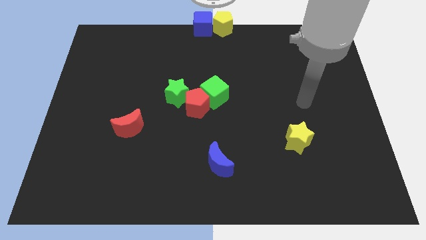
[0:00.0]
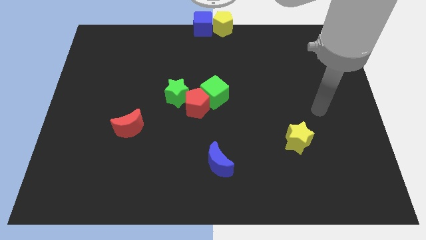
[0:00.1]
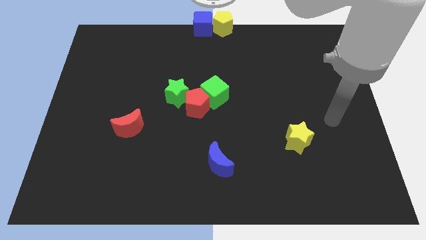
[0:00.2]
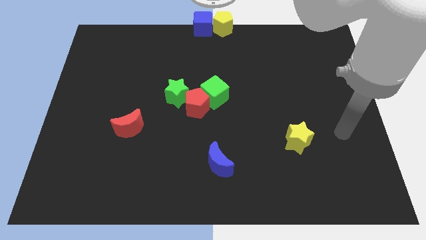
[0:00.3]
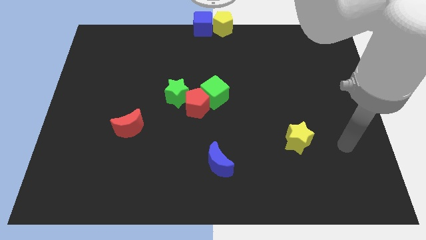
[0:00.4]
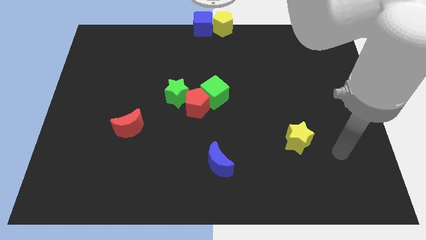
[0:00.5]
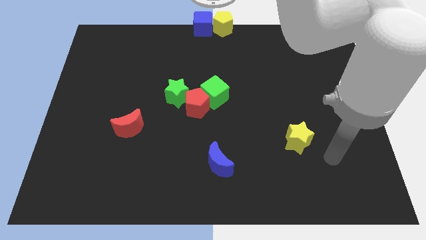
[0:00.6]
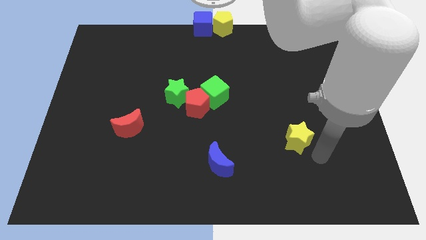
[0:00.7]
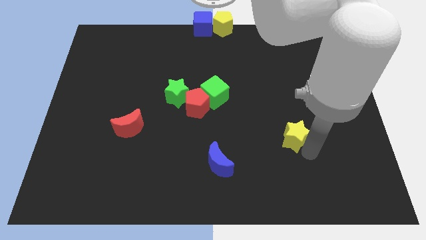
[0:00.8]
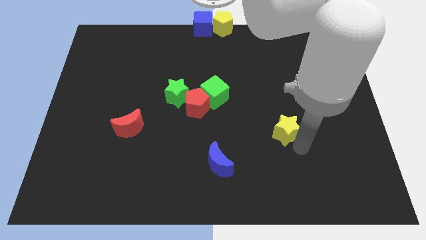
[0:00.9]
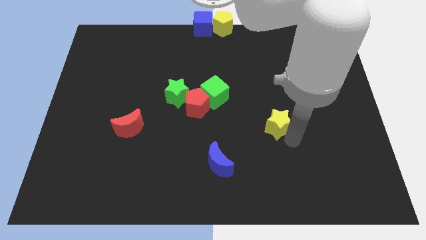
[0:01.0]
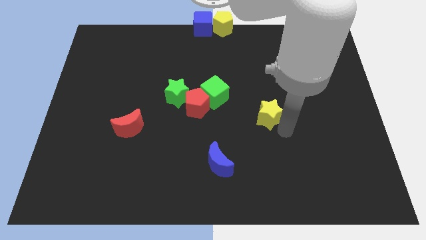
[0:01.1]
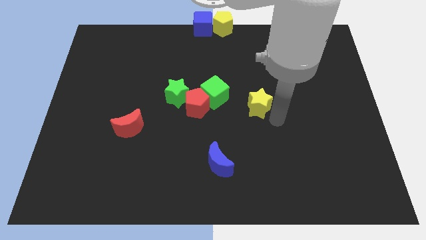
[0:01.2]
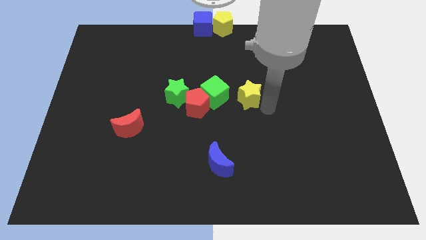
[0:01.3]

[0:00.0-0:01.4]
move the yellow star to the right of the green cube

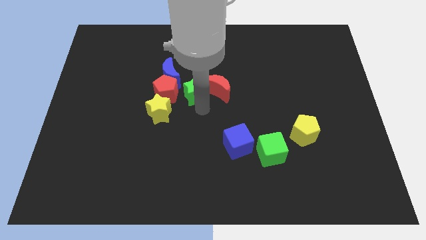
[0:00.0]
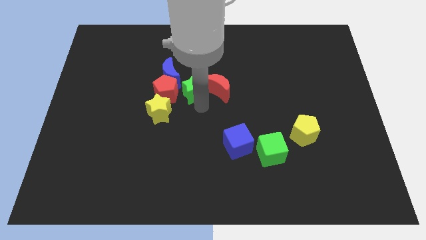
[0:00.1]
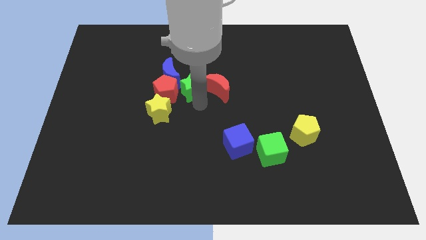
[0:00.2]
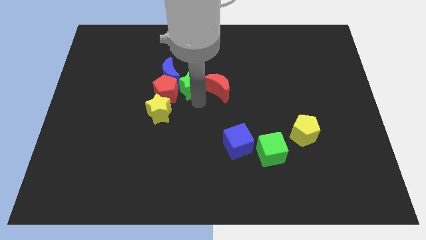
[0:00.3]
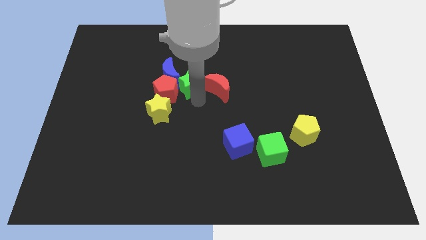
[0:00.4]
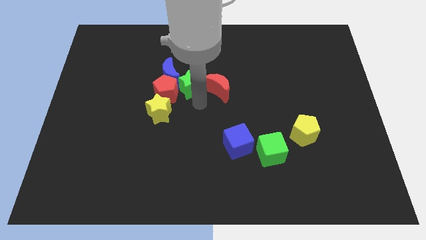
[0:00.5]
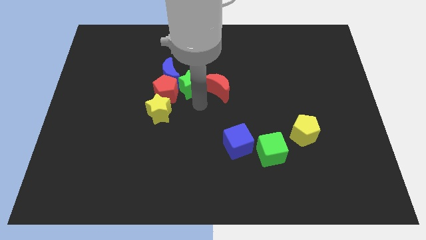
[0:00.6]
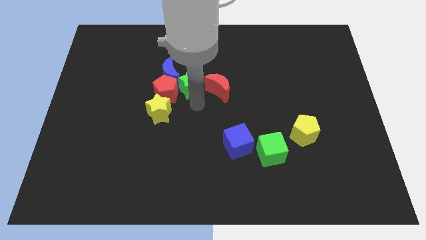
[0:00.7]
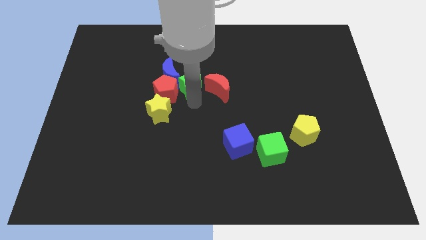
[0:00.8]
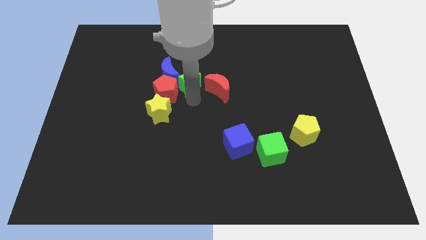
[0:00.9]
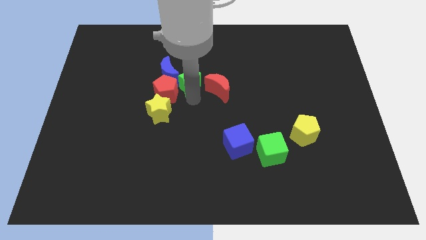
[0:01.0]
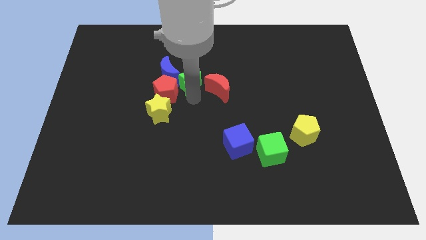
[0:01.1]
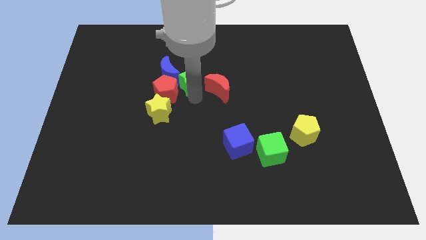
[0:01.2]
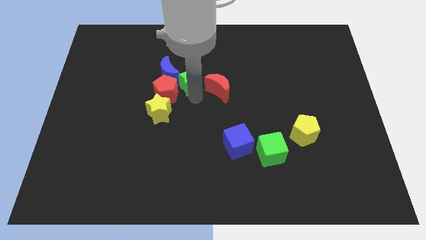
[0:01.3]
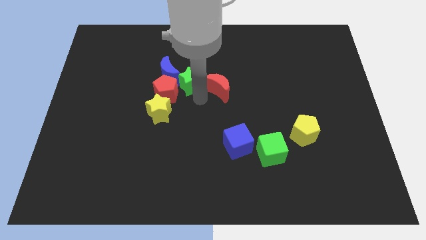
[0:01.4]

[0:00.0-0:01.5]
push the green star into the bottom of the blue crescent

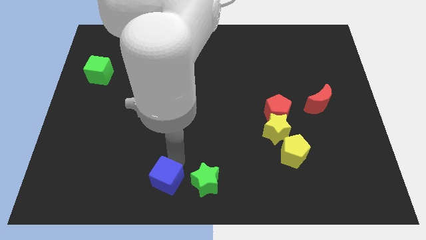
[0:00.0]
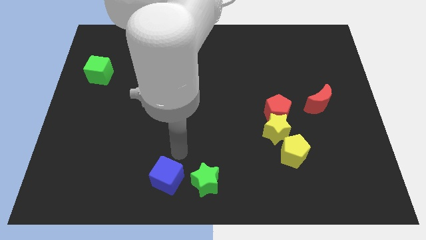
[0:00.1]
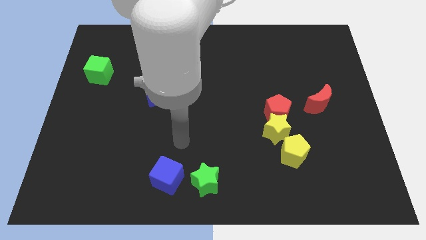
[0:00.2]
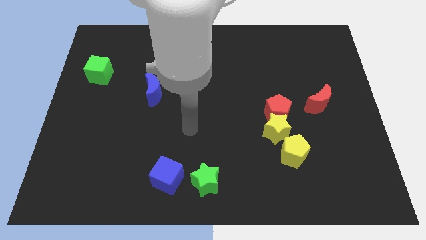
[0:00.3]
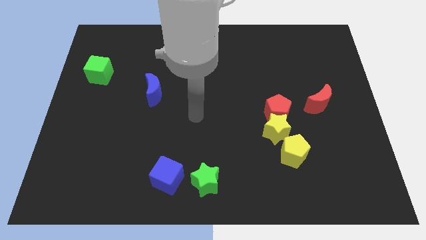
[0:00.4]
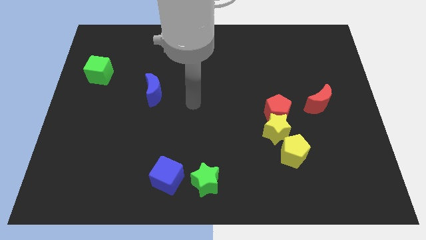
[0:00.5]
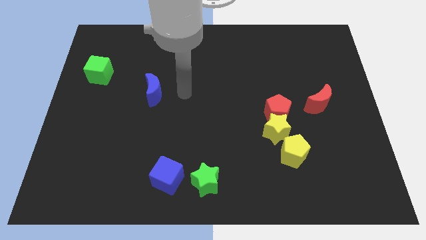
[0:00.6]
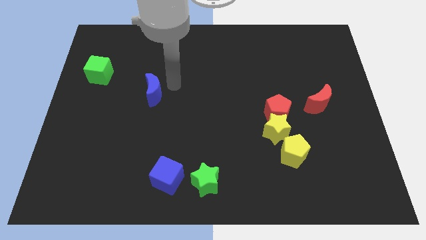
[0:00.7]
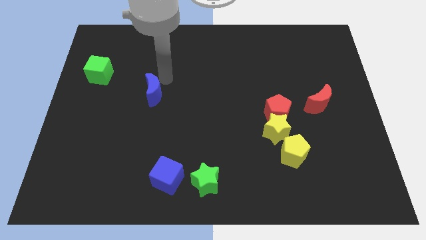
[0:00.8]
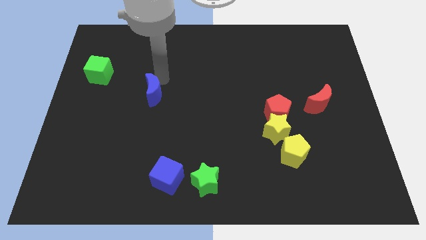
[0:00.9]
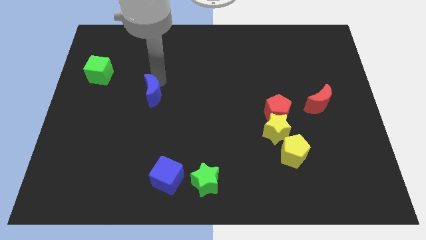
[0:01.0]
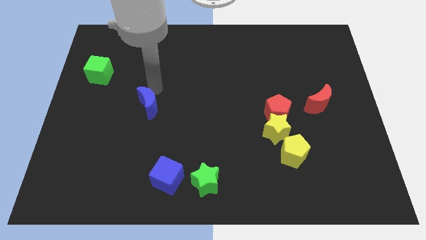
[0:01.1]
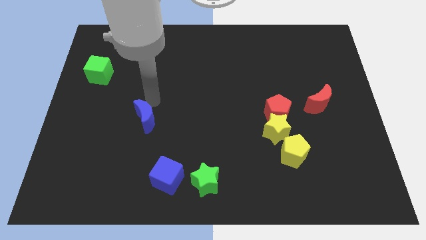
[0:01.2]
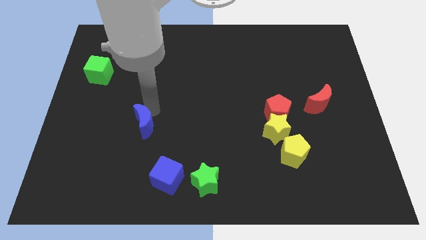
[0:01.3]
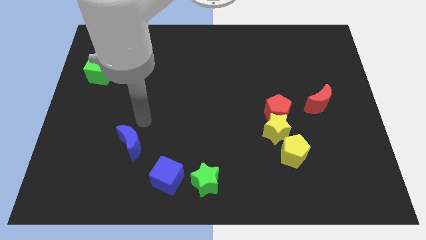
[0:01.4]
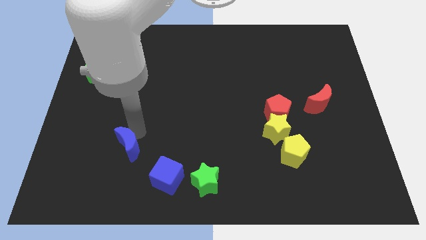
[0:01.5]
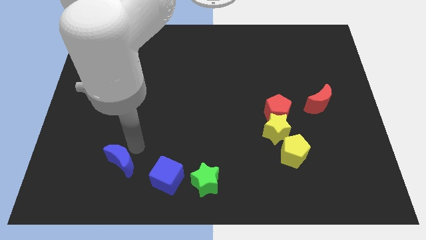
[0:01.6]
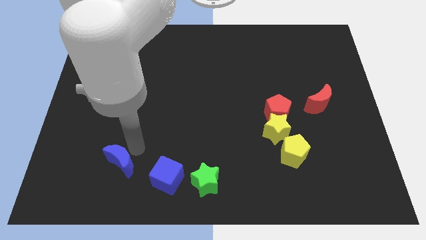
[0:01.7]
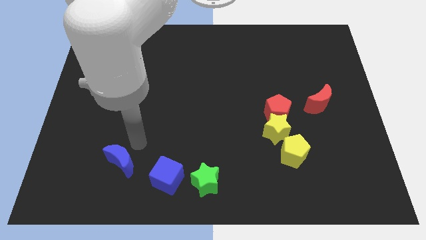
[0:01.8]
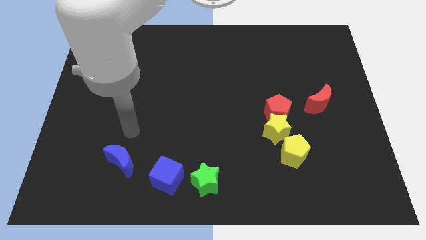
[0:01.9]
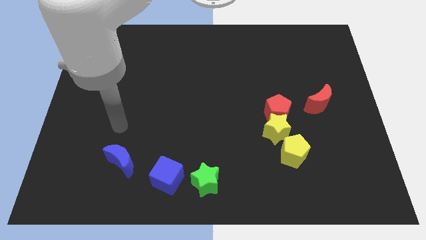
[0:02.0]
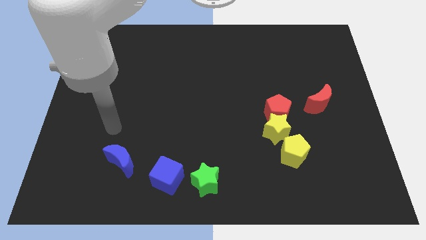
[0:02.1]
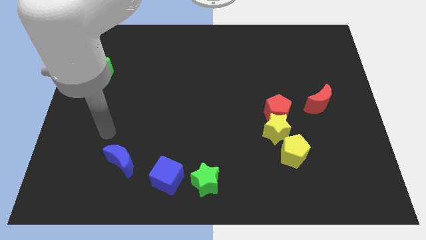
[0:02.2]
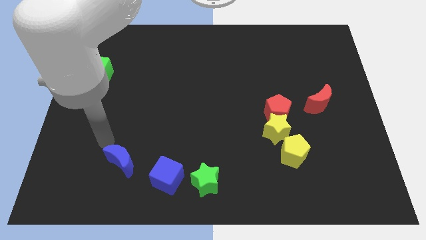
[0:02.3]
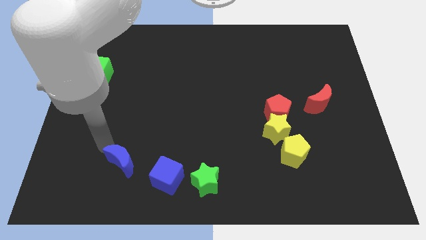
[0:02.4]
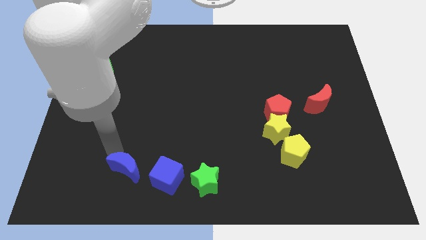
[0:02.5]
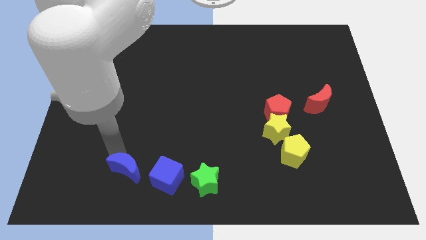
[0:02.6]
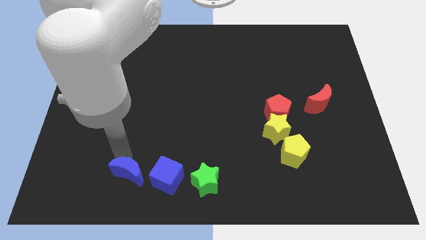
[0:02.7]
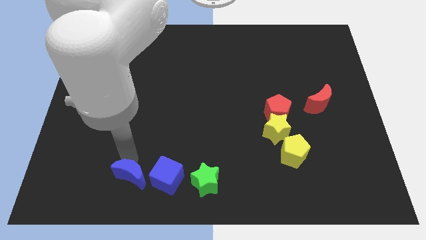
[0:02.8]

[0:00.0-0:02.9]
place the blue crescent to the left side of blue cube

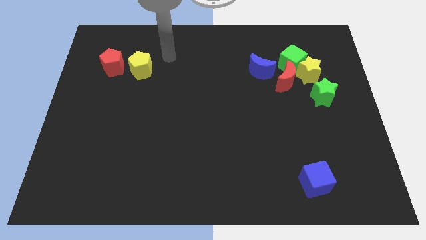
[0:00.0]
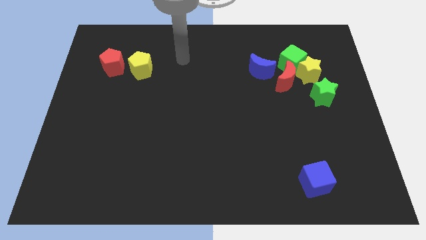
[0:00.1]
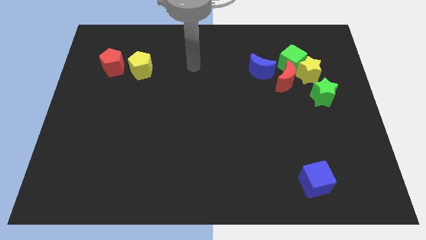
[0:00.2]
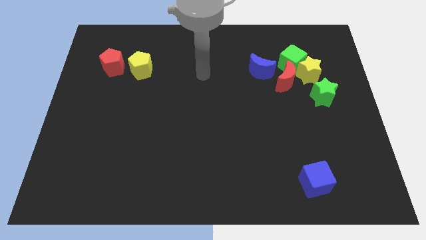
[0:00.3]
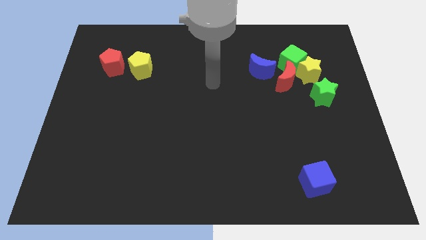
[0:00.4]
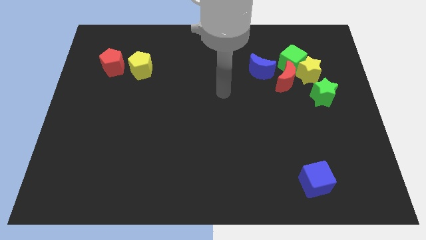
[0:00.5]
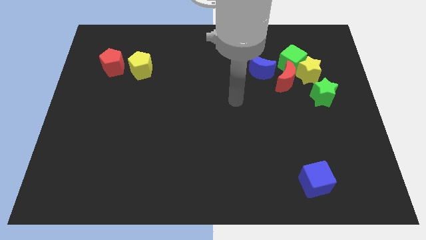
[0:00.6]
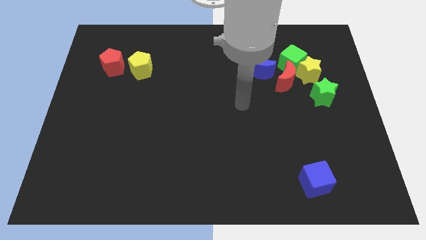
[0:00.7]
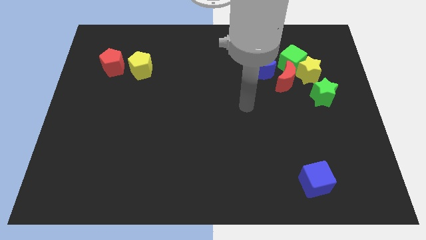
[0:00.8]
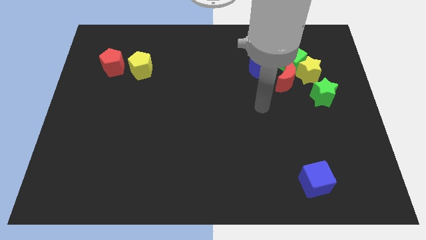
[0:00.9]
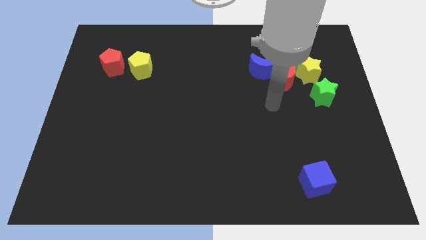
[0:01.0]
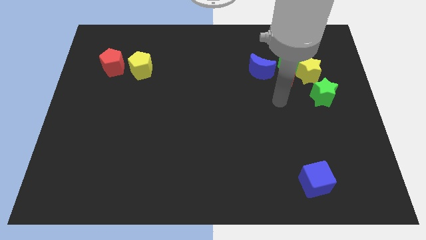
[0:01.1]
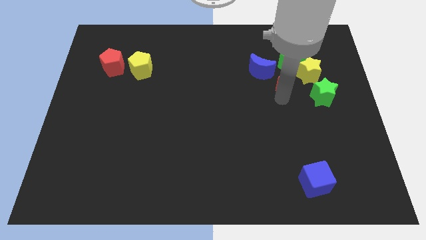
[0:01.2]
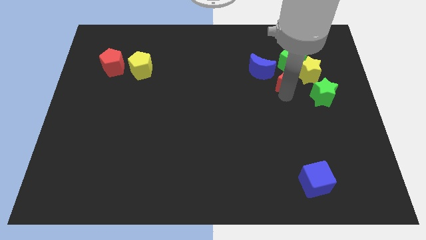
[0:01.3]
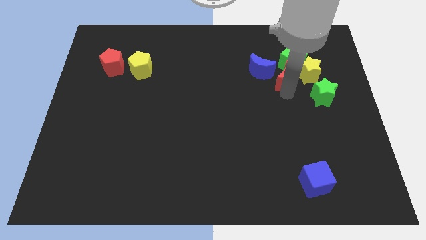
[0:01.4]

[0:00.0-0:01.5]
tap the red crescent

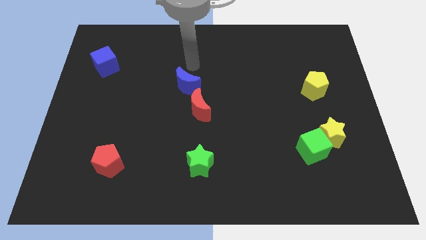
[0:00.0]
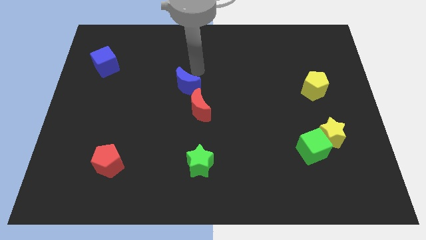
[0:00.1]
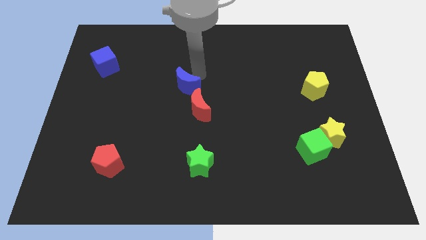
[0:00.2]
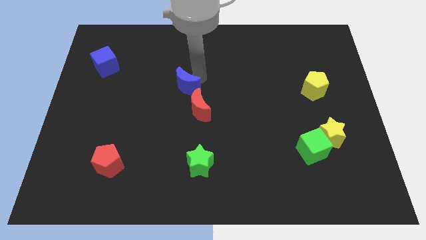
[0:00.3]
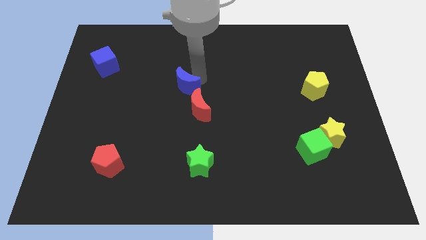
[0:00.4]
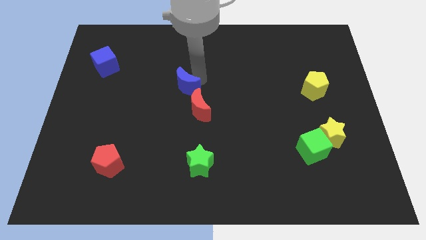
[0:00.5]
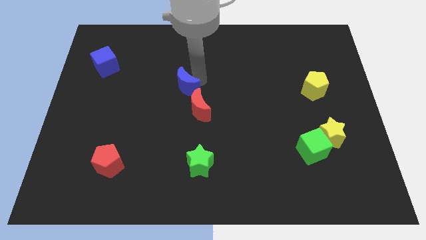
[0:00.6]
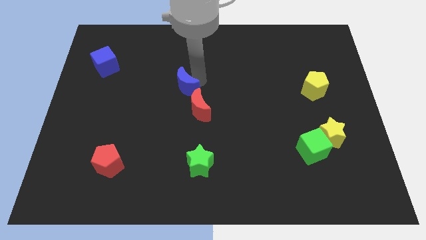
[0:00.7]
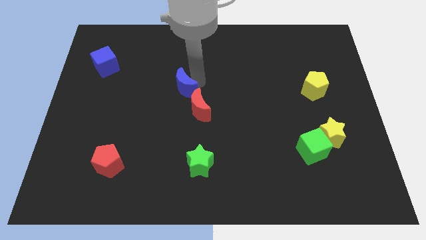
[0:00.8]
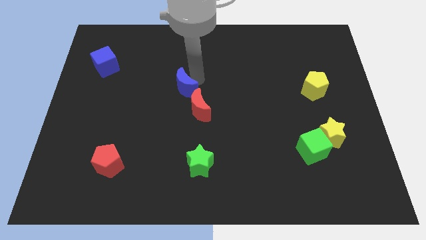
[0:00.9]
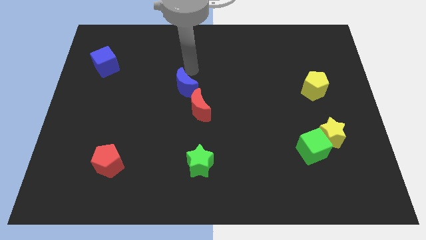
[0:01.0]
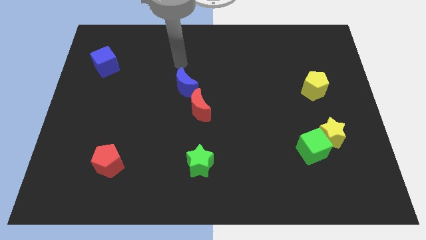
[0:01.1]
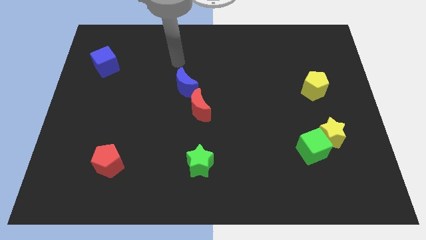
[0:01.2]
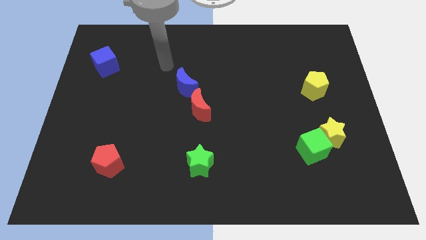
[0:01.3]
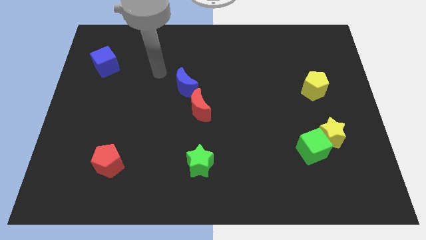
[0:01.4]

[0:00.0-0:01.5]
adjust the blue crescent diagonally to red crescent

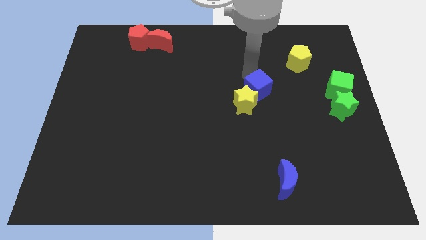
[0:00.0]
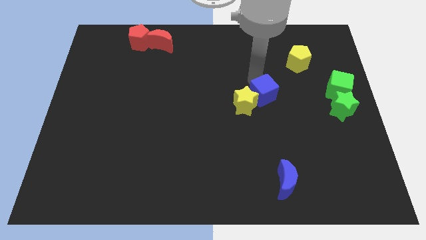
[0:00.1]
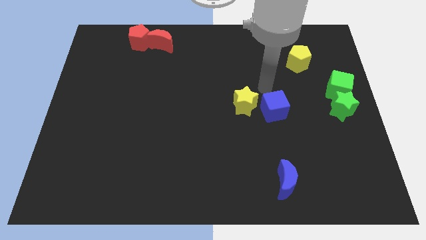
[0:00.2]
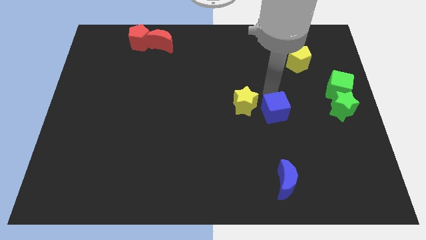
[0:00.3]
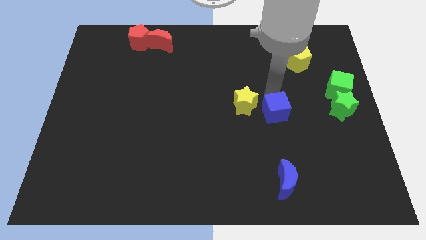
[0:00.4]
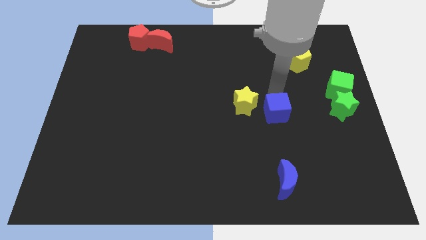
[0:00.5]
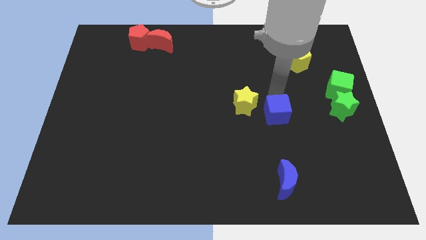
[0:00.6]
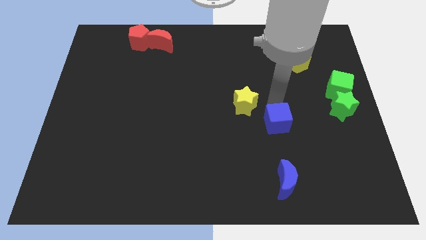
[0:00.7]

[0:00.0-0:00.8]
place the blue vertically to the blue crescent
